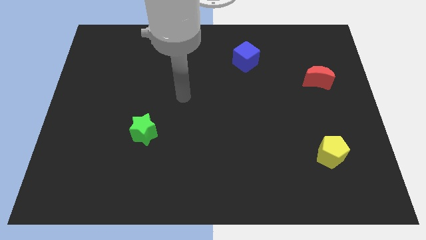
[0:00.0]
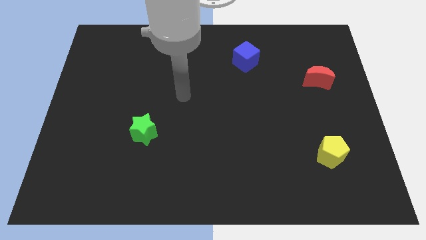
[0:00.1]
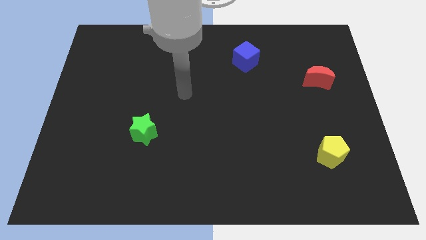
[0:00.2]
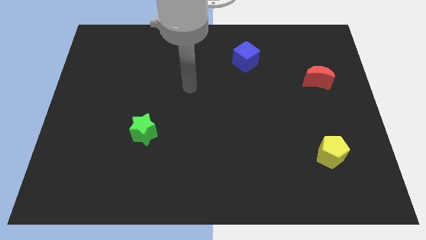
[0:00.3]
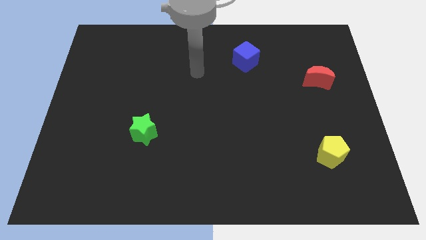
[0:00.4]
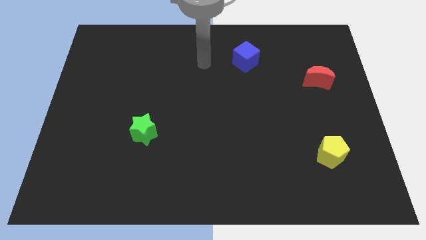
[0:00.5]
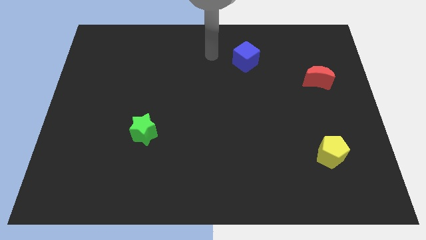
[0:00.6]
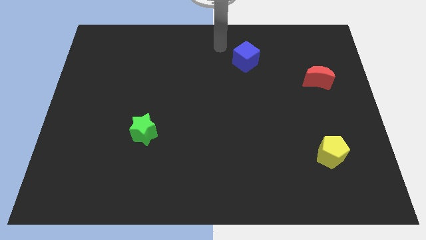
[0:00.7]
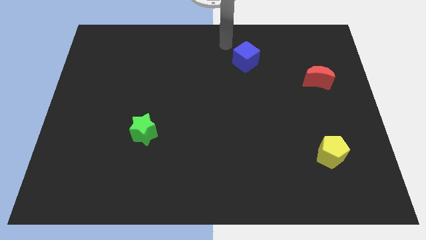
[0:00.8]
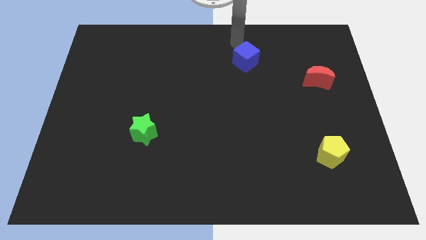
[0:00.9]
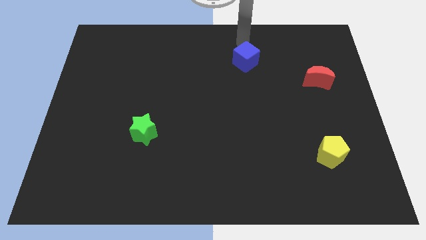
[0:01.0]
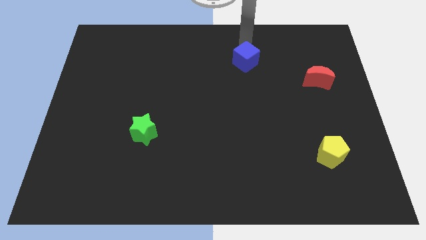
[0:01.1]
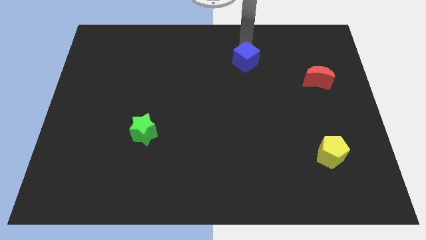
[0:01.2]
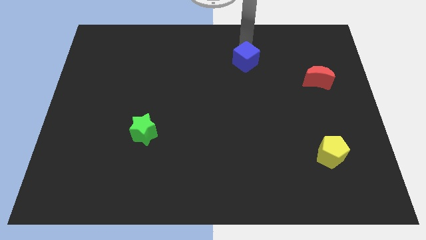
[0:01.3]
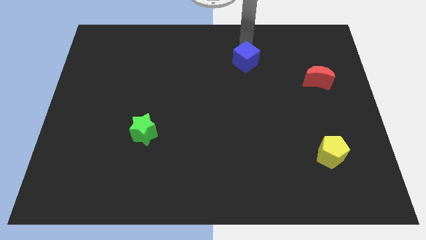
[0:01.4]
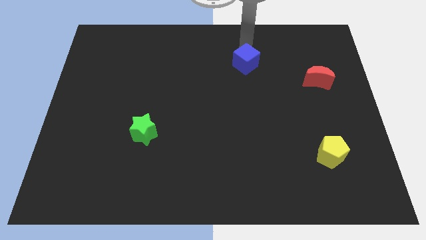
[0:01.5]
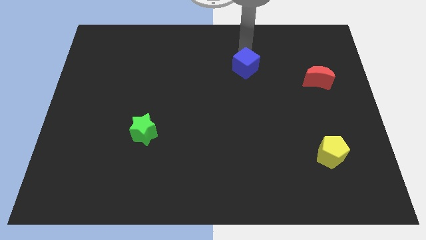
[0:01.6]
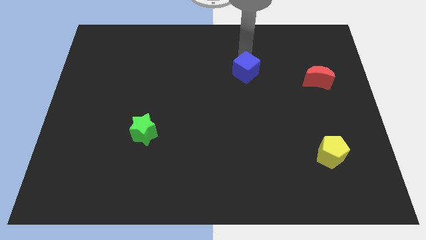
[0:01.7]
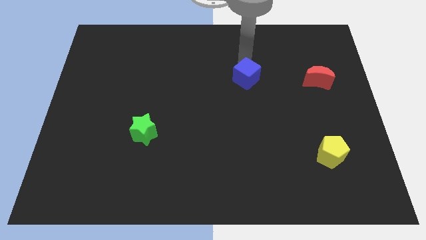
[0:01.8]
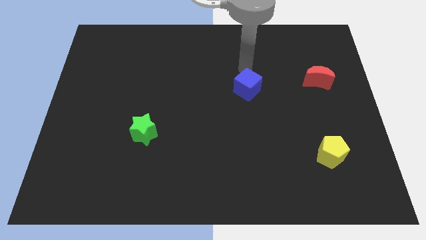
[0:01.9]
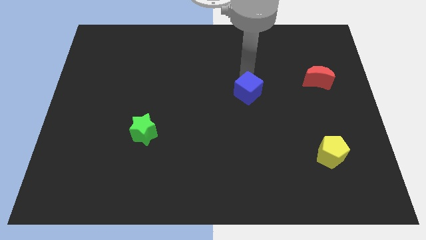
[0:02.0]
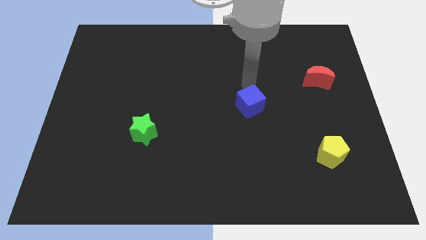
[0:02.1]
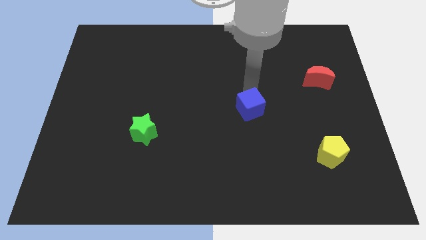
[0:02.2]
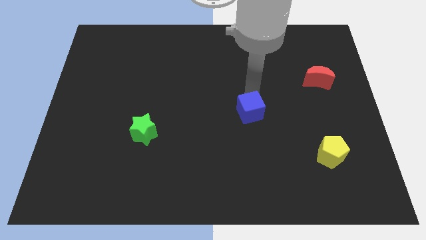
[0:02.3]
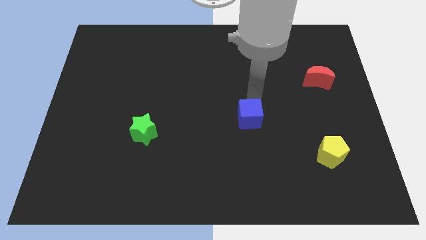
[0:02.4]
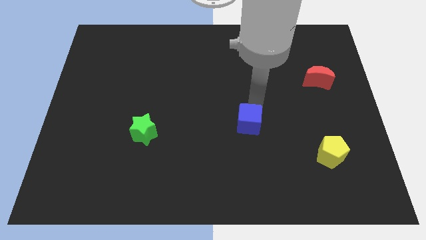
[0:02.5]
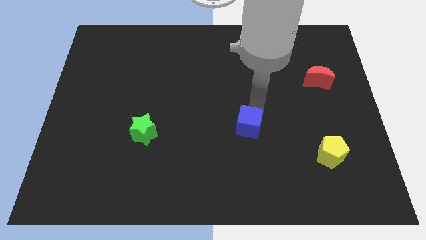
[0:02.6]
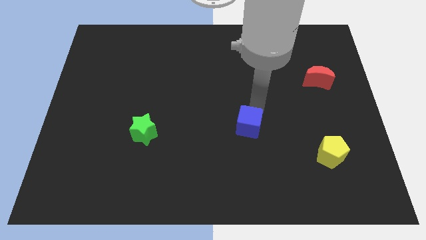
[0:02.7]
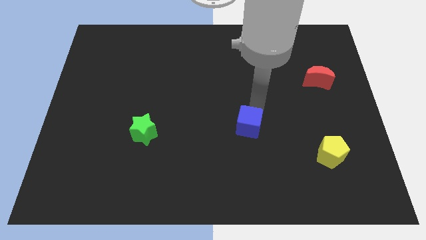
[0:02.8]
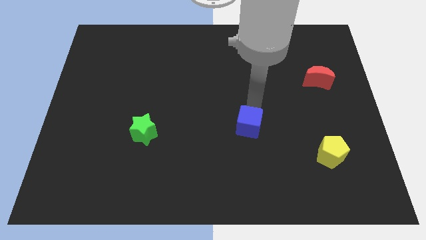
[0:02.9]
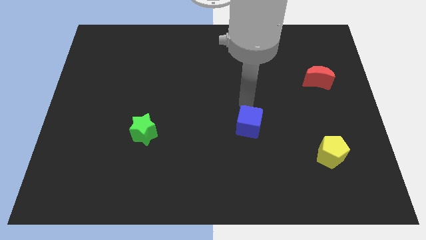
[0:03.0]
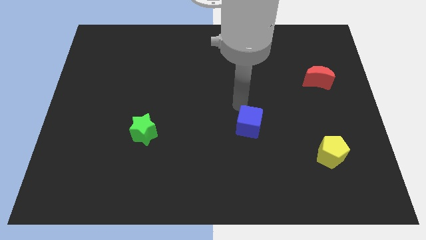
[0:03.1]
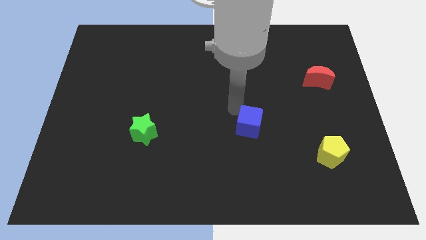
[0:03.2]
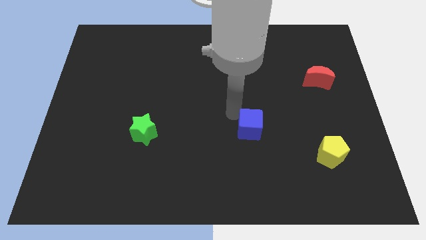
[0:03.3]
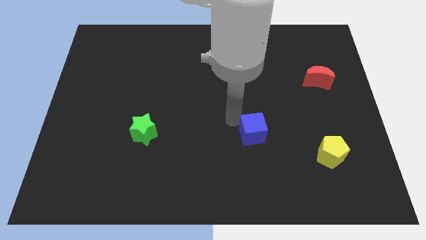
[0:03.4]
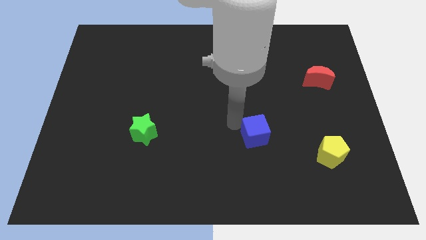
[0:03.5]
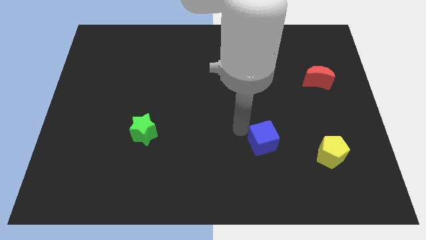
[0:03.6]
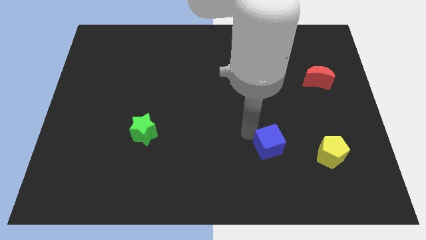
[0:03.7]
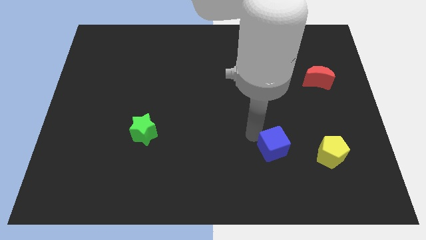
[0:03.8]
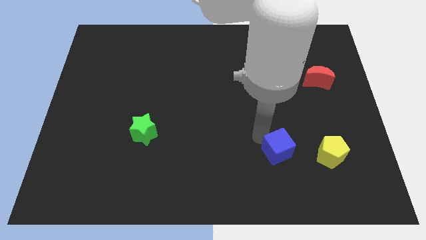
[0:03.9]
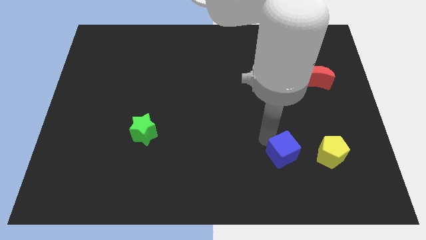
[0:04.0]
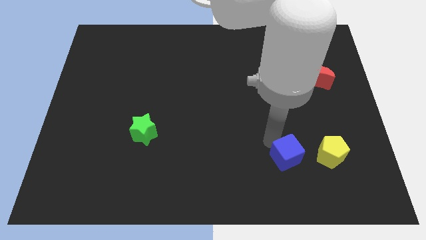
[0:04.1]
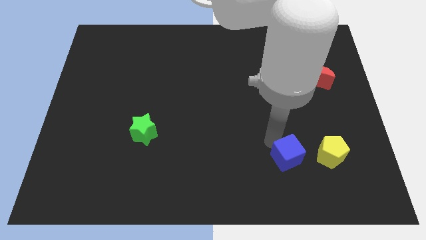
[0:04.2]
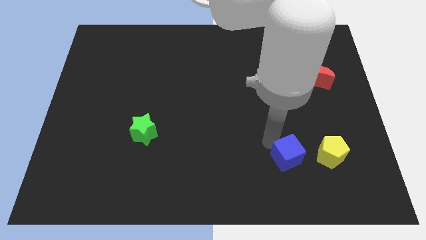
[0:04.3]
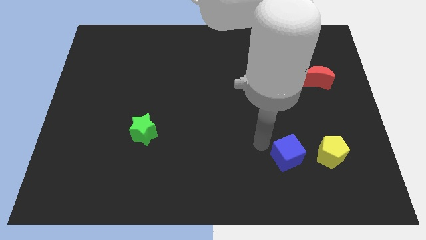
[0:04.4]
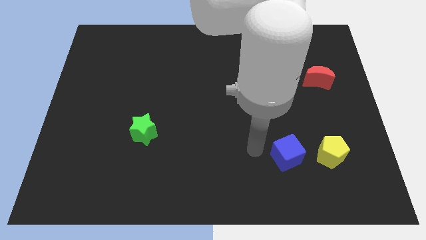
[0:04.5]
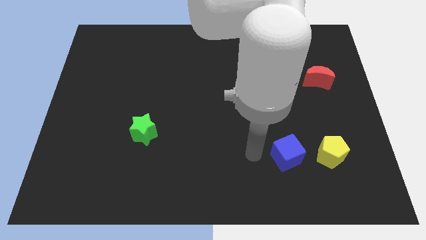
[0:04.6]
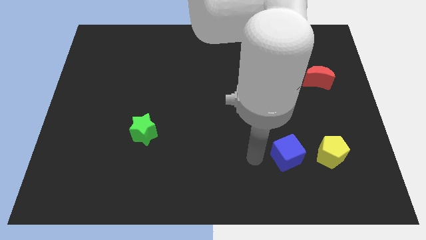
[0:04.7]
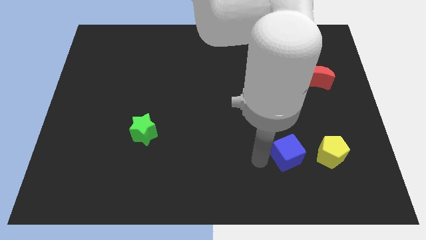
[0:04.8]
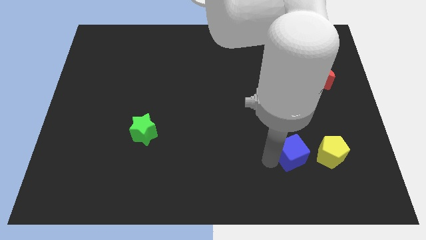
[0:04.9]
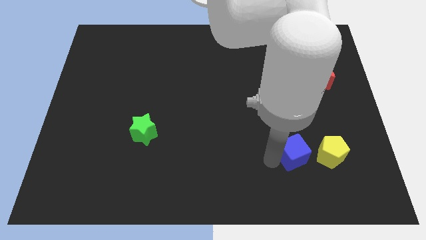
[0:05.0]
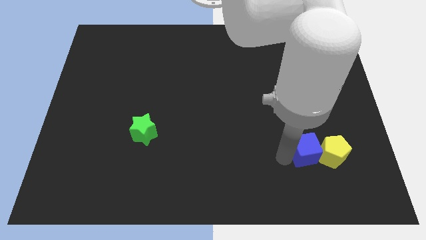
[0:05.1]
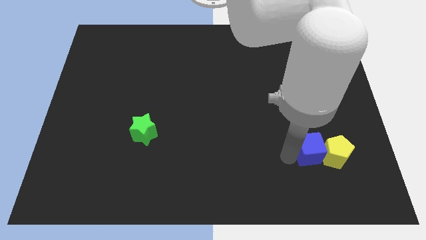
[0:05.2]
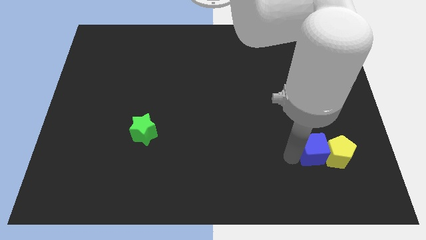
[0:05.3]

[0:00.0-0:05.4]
put the cube next to the yellow pentagon

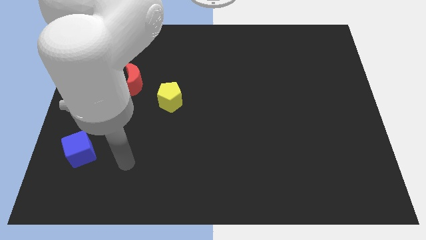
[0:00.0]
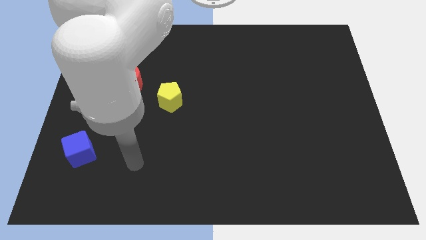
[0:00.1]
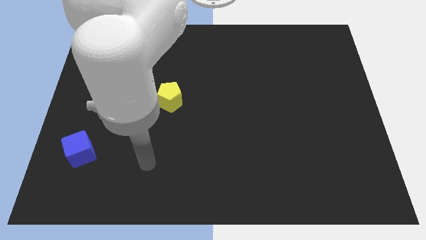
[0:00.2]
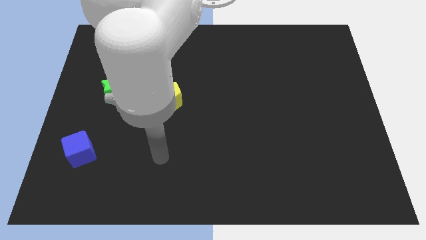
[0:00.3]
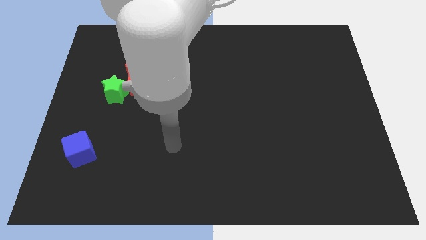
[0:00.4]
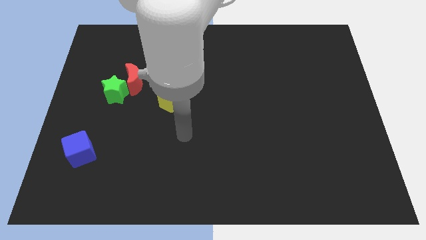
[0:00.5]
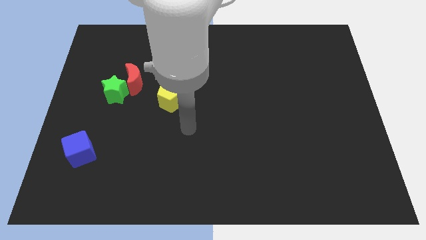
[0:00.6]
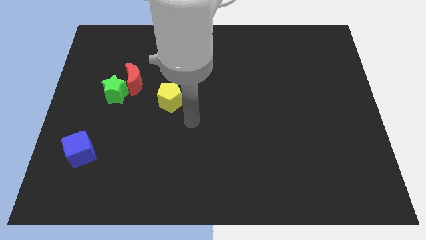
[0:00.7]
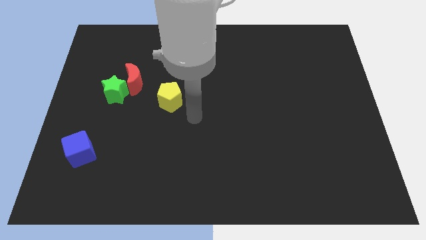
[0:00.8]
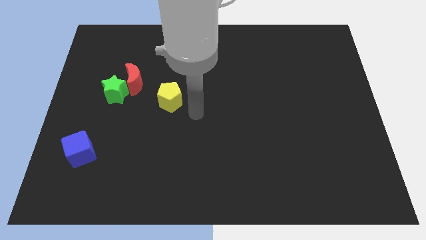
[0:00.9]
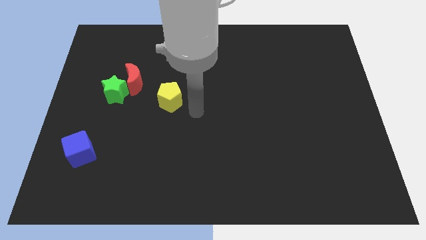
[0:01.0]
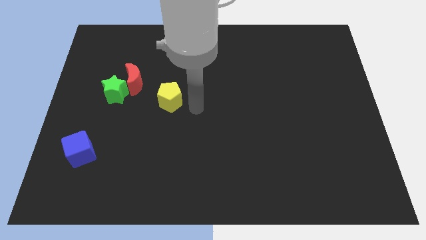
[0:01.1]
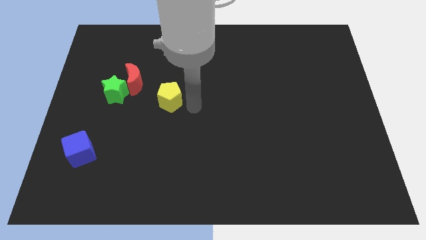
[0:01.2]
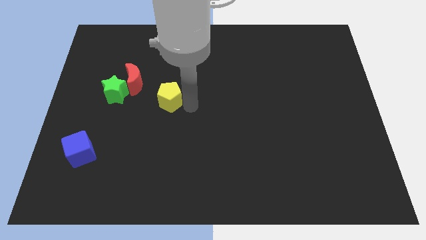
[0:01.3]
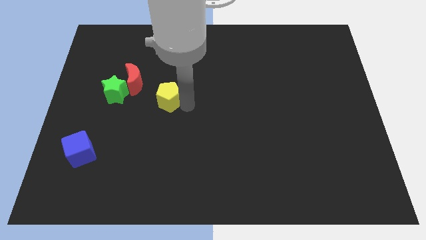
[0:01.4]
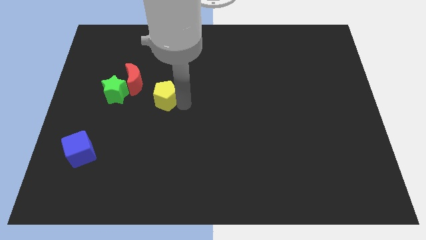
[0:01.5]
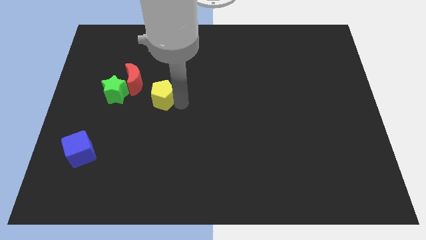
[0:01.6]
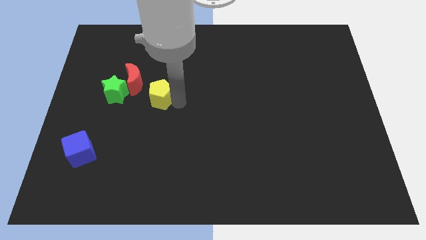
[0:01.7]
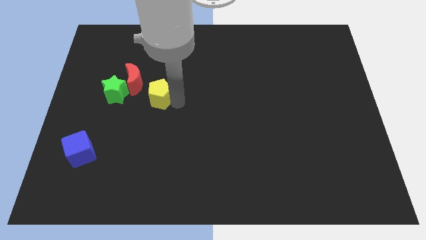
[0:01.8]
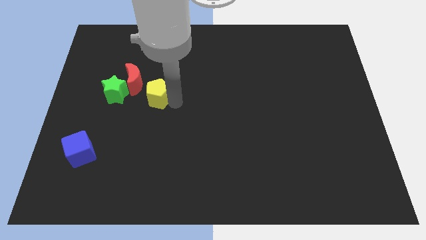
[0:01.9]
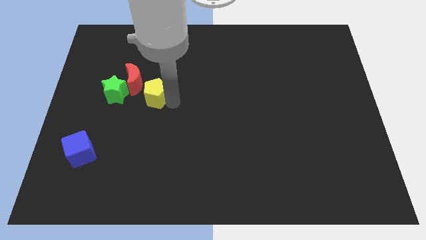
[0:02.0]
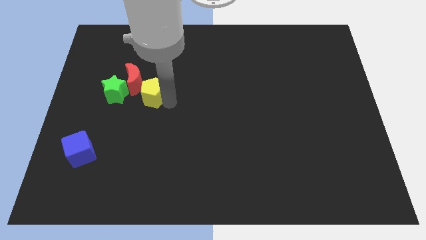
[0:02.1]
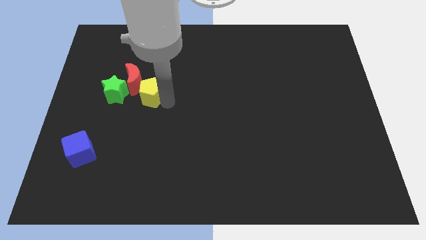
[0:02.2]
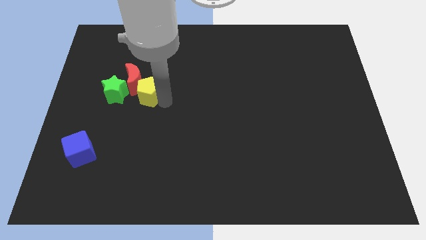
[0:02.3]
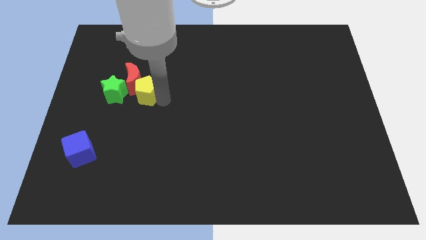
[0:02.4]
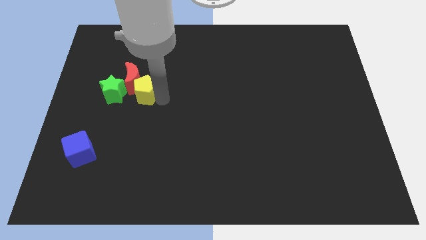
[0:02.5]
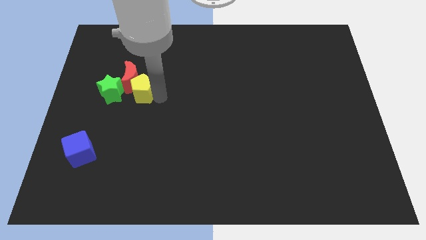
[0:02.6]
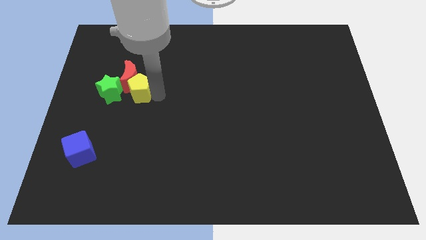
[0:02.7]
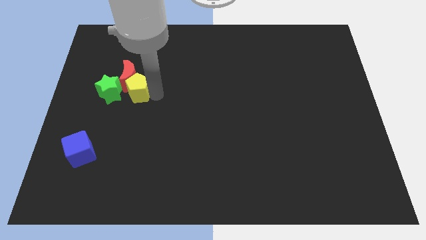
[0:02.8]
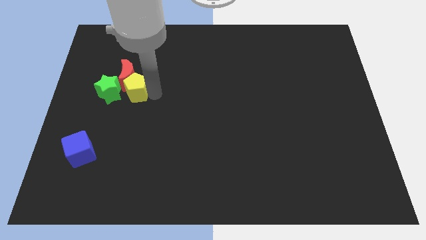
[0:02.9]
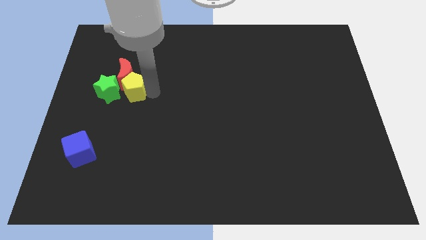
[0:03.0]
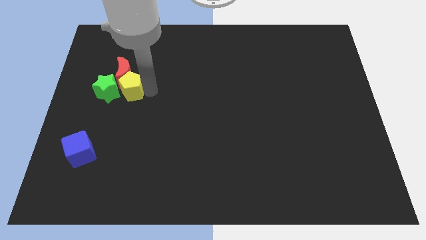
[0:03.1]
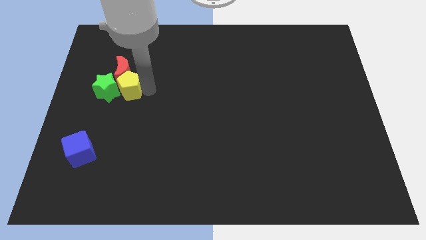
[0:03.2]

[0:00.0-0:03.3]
slide the yellow block next to the green block
